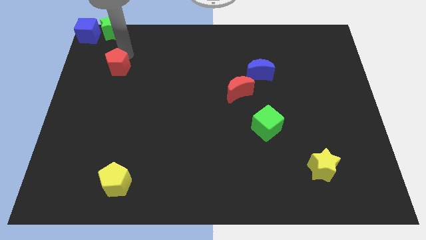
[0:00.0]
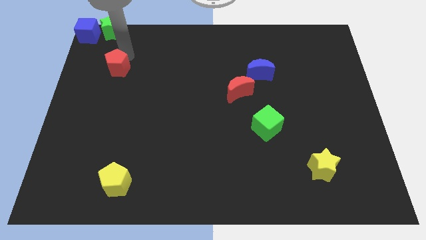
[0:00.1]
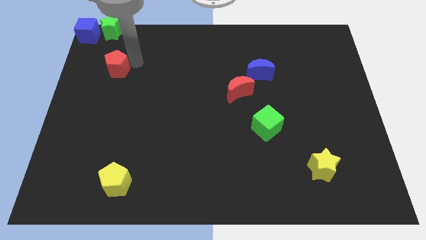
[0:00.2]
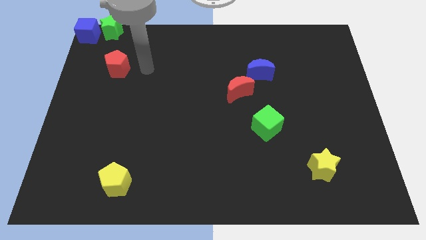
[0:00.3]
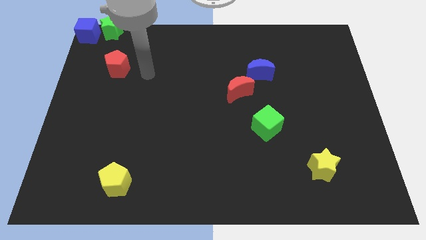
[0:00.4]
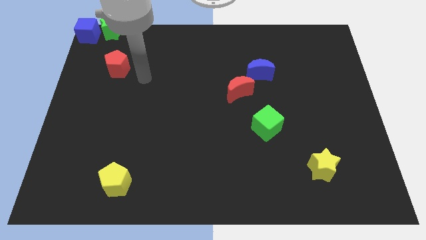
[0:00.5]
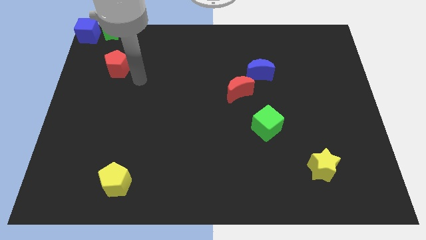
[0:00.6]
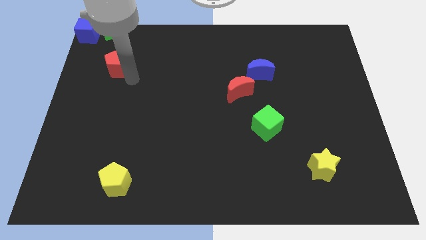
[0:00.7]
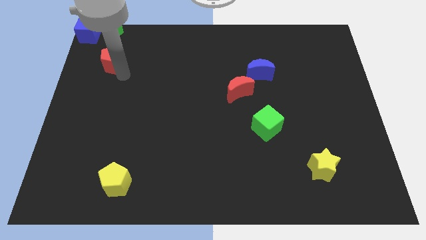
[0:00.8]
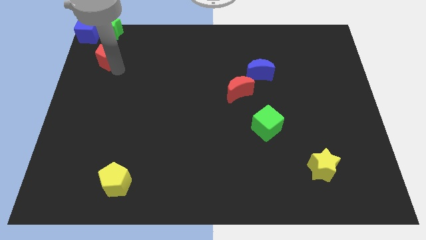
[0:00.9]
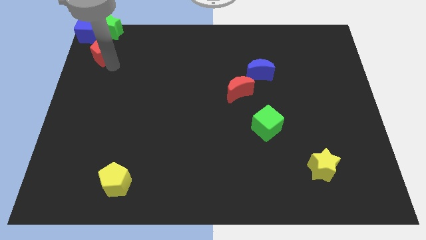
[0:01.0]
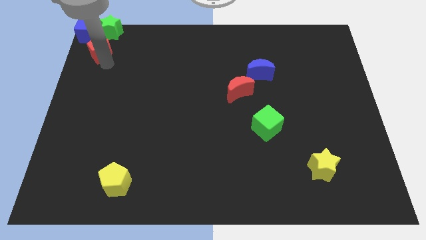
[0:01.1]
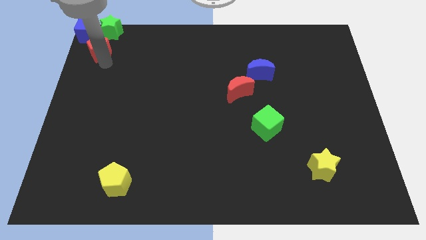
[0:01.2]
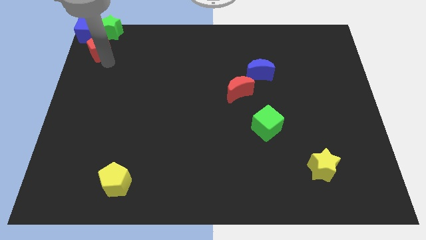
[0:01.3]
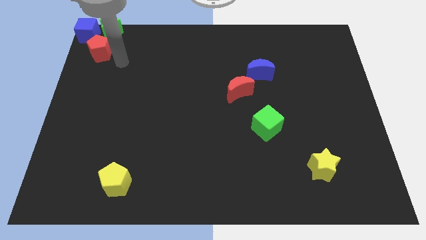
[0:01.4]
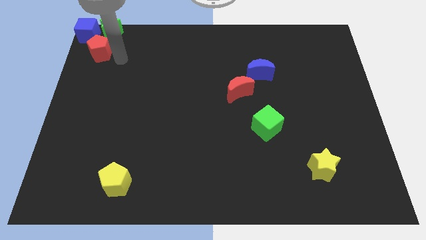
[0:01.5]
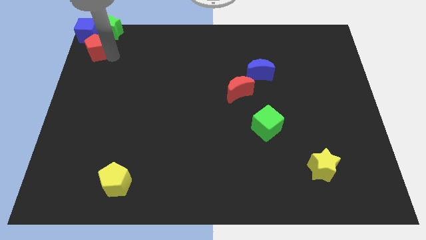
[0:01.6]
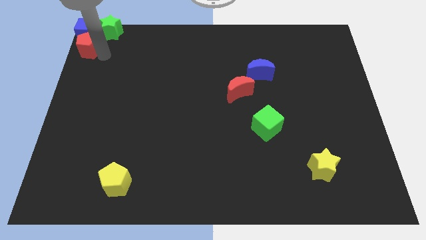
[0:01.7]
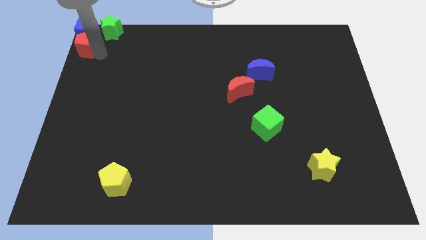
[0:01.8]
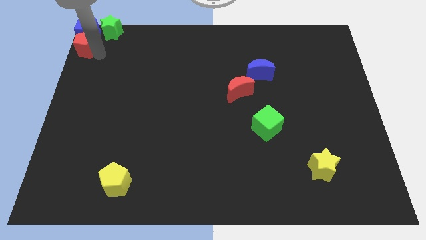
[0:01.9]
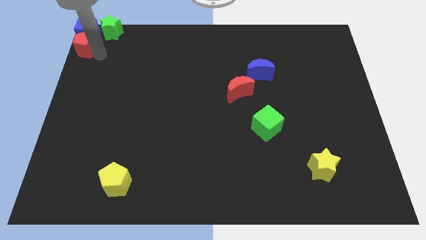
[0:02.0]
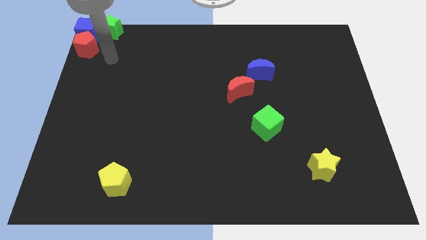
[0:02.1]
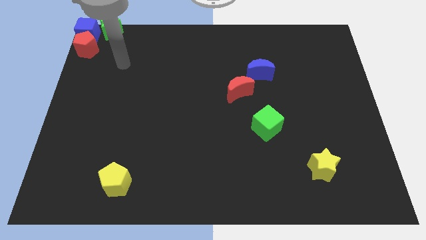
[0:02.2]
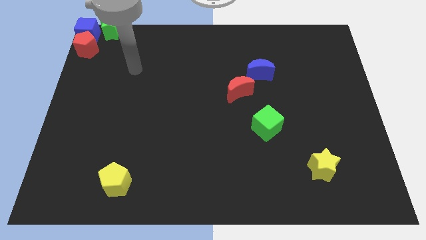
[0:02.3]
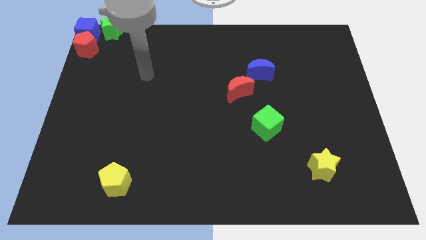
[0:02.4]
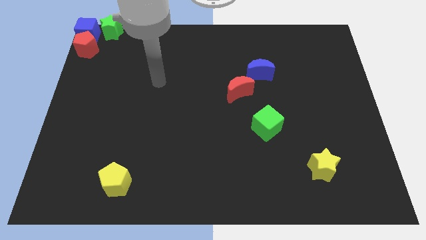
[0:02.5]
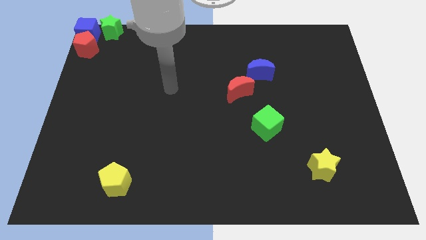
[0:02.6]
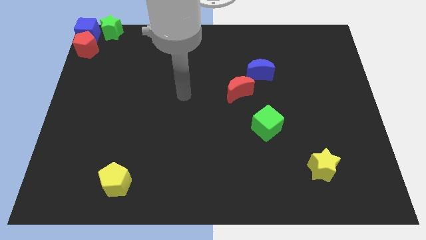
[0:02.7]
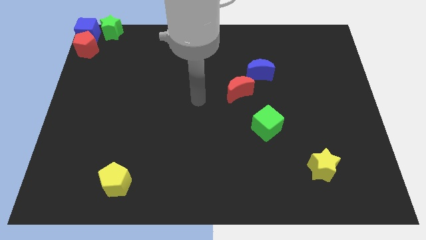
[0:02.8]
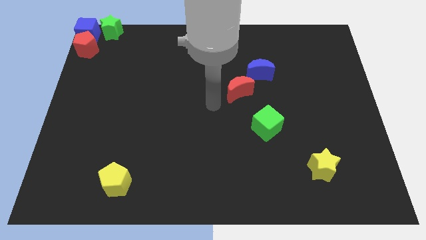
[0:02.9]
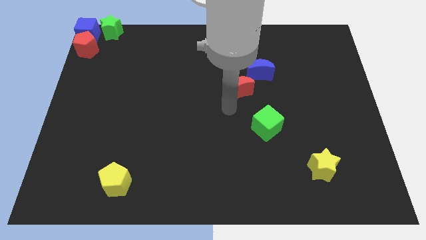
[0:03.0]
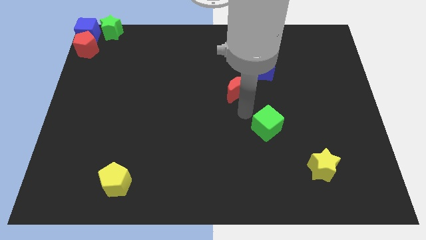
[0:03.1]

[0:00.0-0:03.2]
push the red pentagon at the top left corner

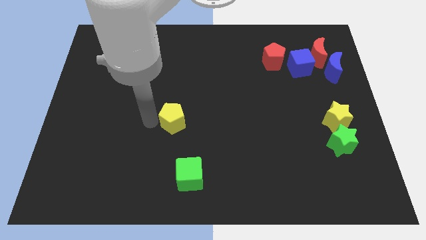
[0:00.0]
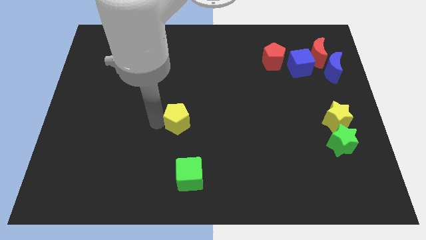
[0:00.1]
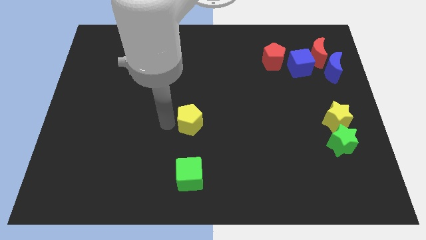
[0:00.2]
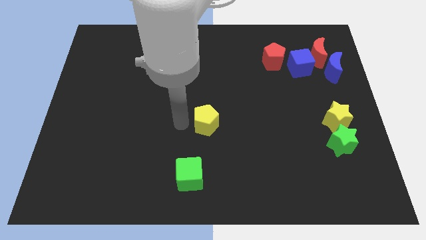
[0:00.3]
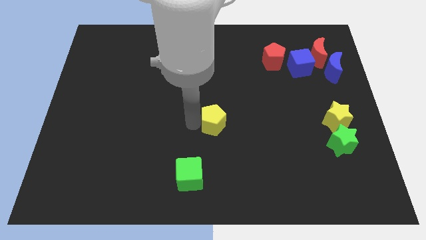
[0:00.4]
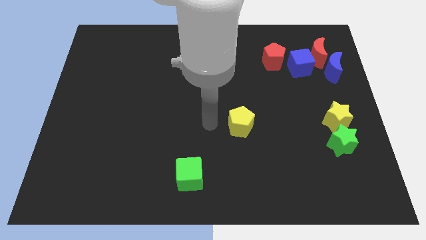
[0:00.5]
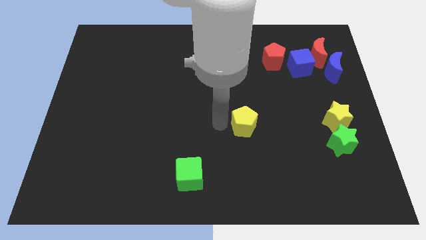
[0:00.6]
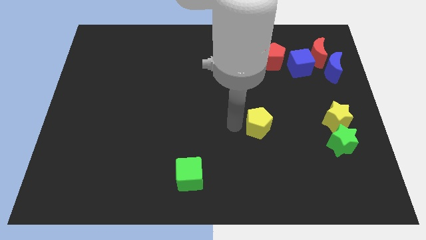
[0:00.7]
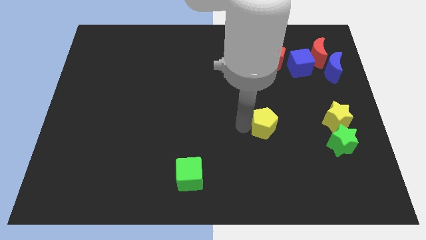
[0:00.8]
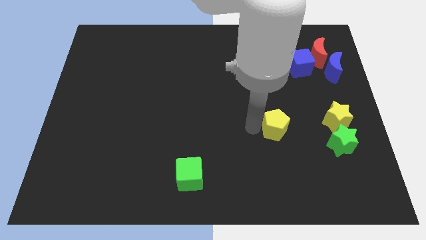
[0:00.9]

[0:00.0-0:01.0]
drag yellow pentagon towards yellow star

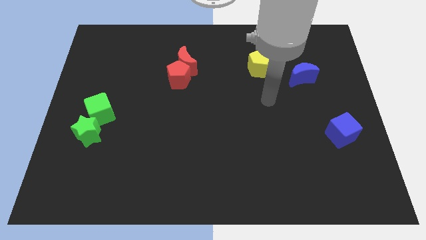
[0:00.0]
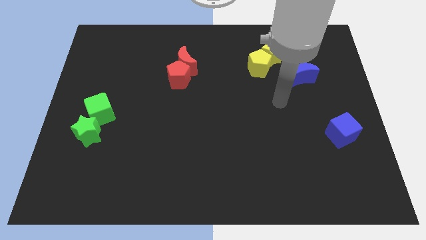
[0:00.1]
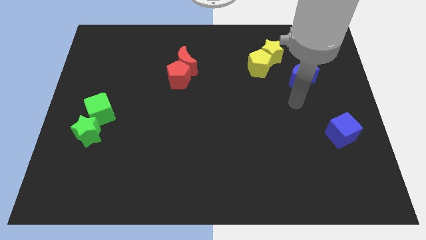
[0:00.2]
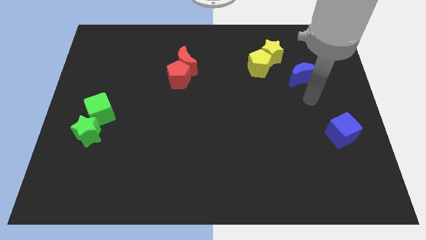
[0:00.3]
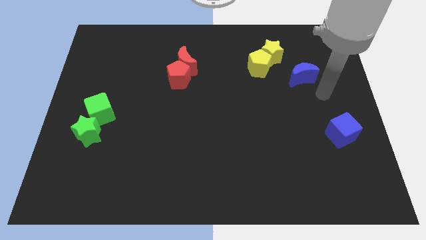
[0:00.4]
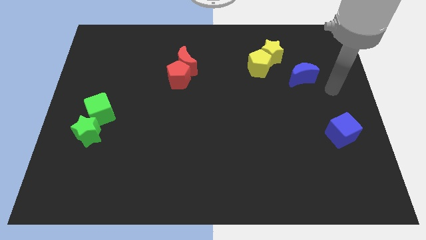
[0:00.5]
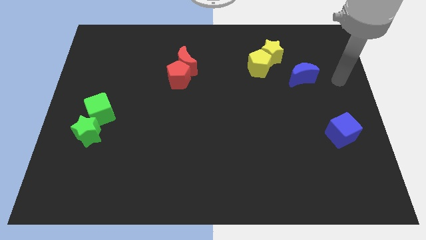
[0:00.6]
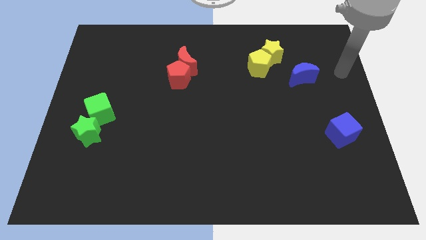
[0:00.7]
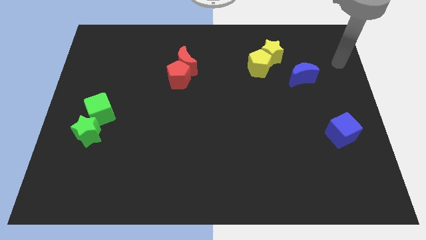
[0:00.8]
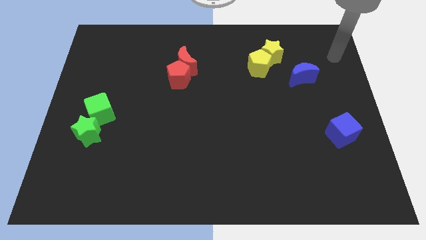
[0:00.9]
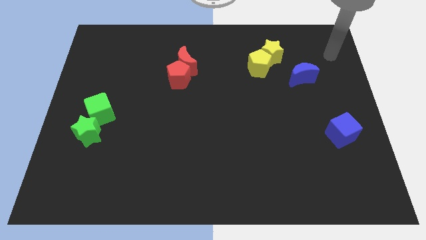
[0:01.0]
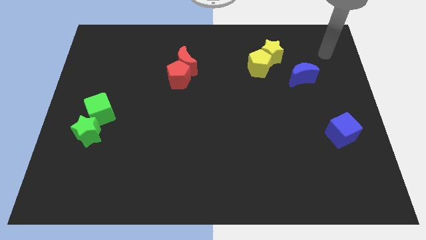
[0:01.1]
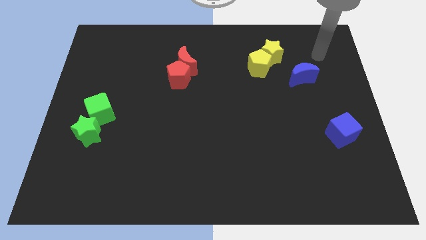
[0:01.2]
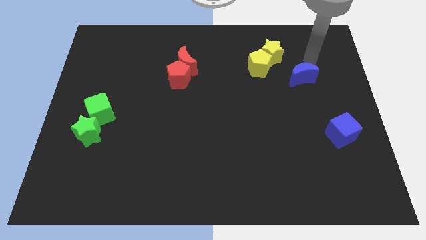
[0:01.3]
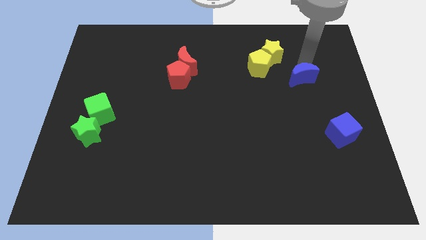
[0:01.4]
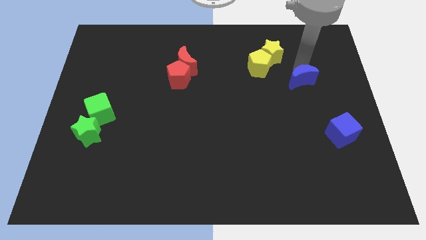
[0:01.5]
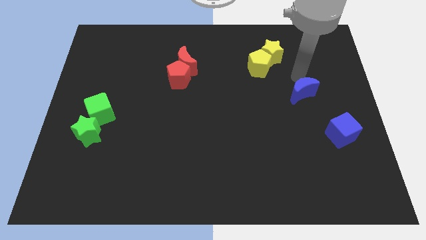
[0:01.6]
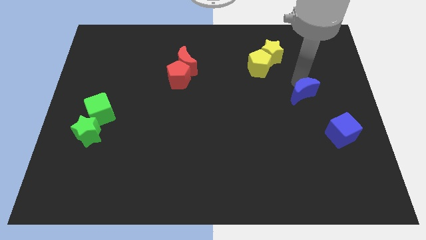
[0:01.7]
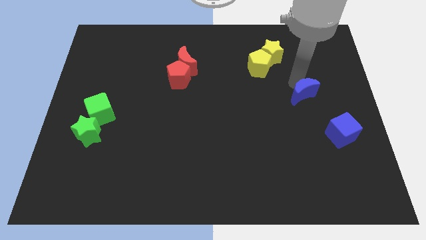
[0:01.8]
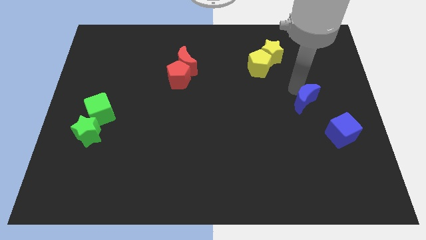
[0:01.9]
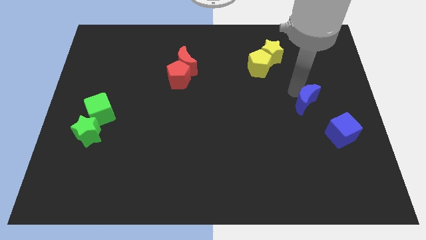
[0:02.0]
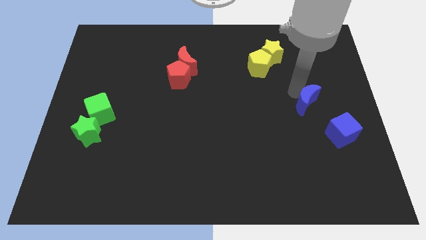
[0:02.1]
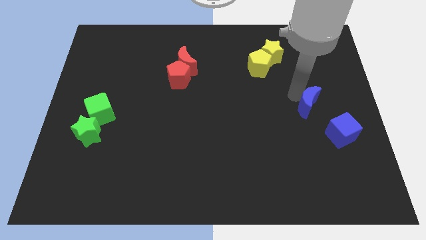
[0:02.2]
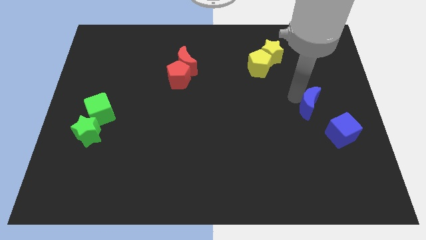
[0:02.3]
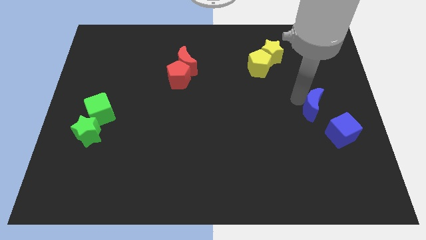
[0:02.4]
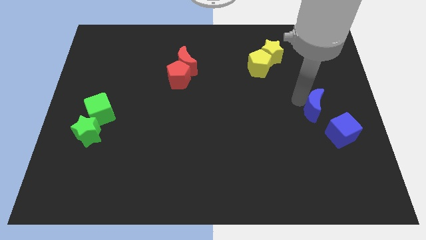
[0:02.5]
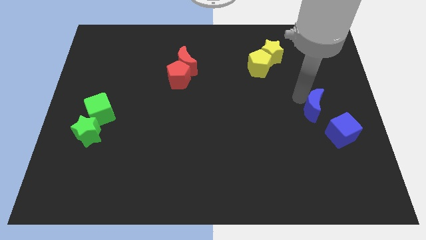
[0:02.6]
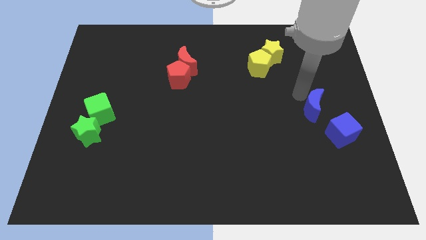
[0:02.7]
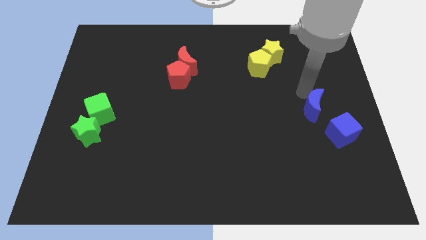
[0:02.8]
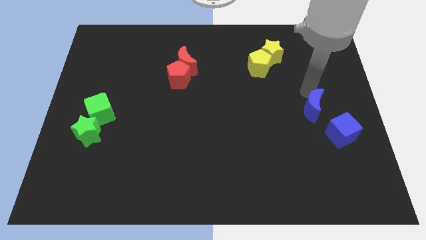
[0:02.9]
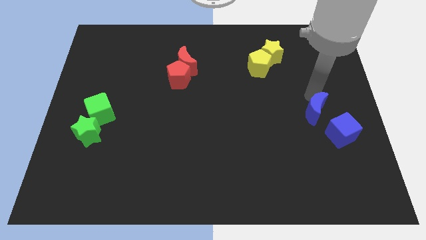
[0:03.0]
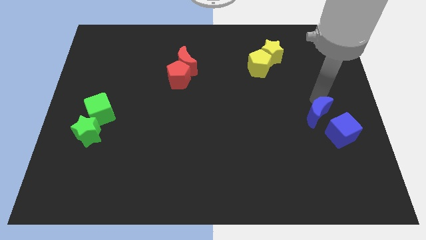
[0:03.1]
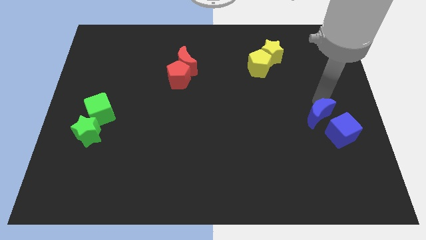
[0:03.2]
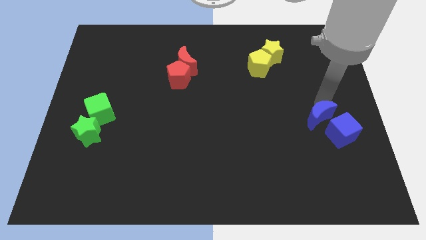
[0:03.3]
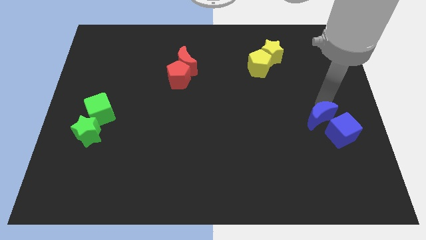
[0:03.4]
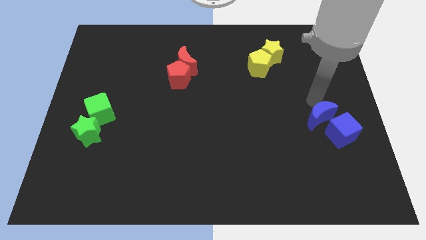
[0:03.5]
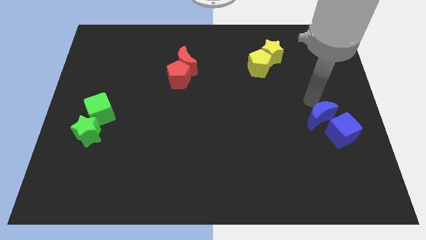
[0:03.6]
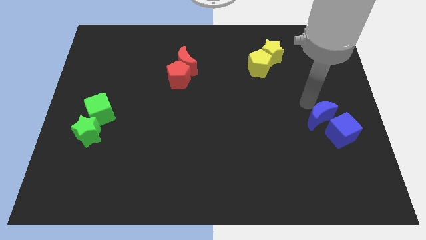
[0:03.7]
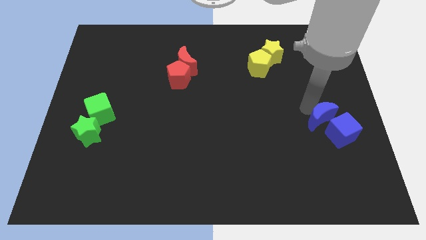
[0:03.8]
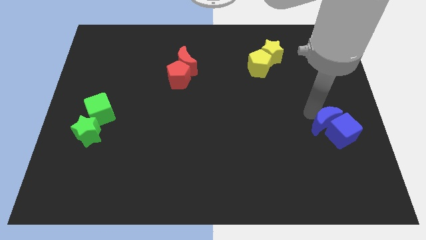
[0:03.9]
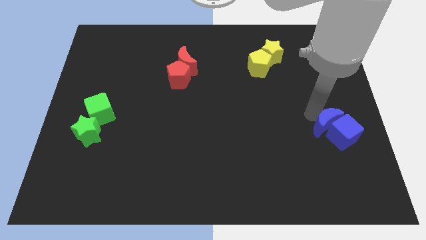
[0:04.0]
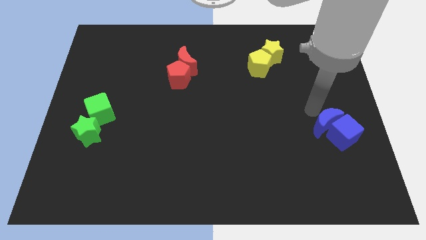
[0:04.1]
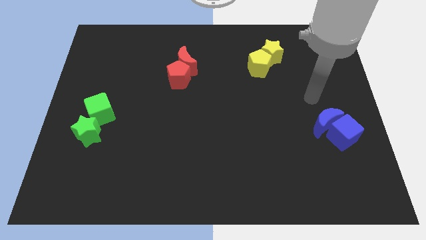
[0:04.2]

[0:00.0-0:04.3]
put the blue moon to the top left side of the blue cube

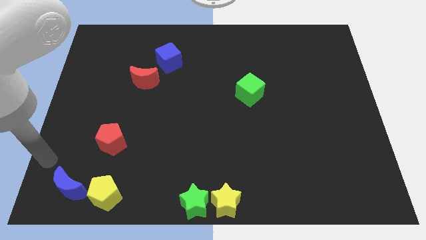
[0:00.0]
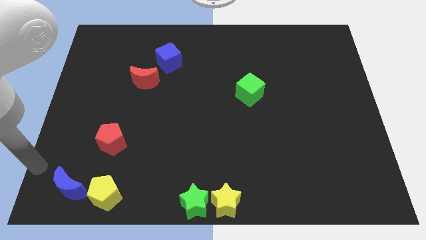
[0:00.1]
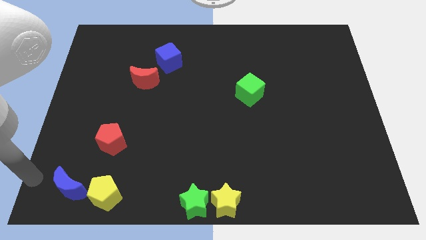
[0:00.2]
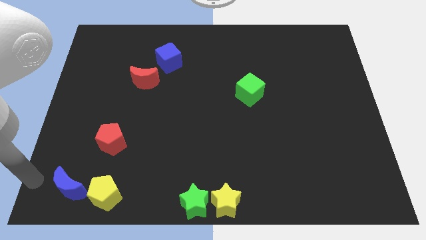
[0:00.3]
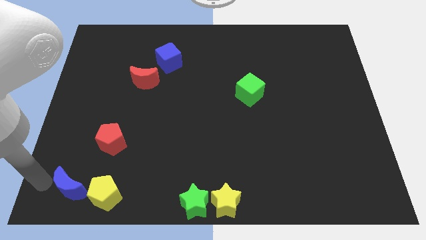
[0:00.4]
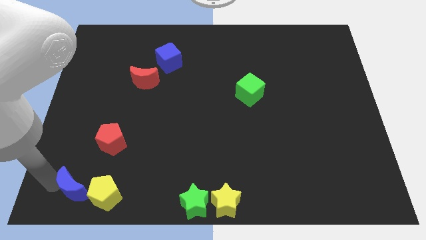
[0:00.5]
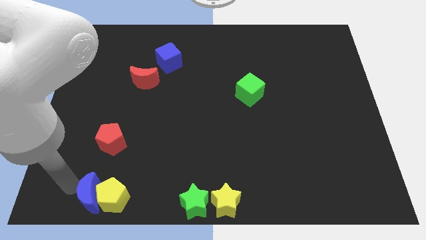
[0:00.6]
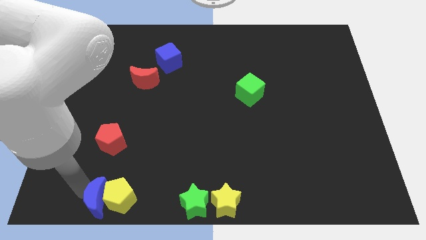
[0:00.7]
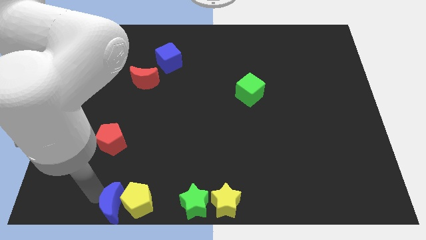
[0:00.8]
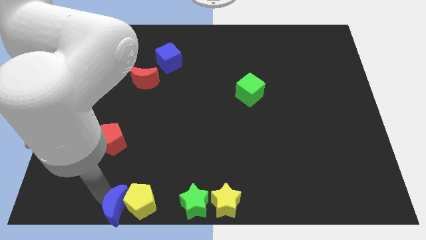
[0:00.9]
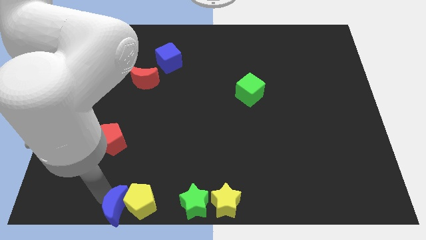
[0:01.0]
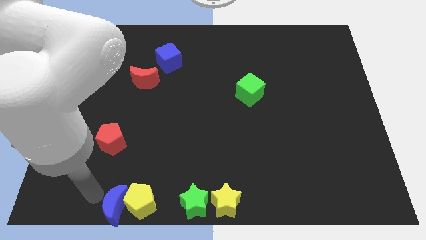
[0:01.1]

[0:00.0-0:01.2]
slide the blue crescent and the yellow pentagon to the right
